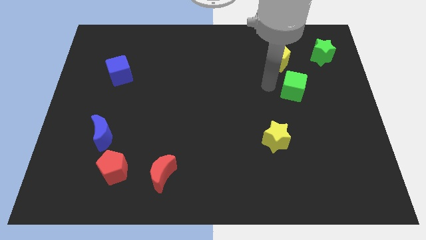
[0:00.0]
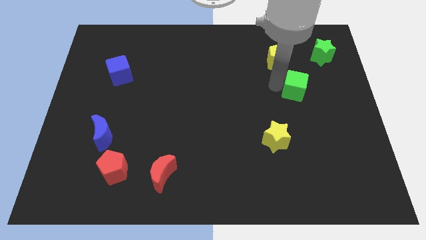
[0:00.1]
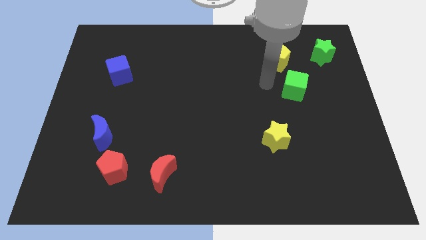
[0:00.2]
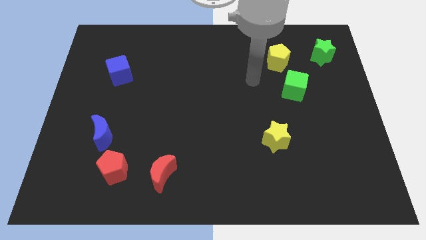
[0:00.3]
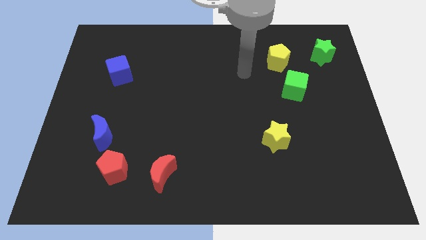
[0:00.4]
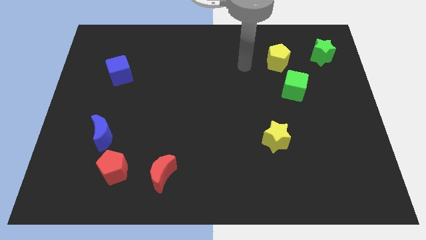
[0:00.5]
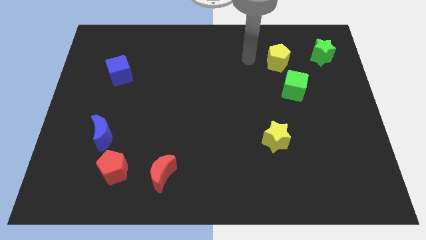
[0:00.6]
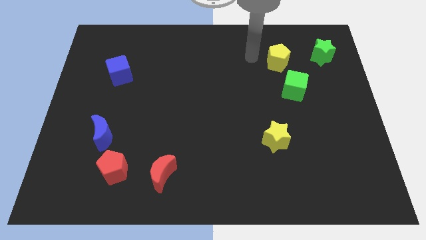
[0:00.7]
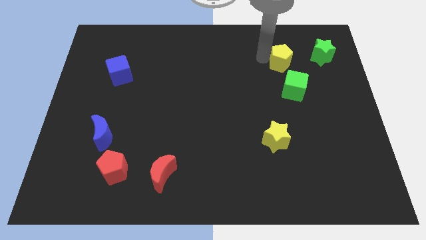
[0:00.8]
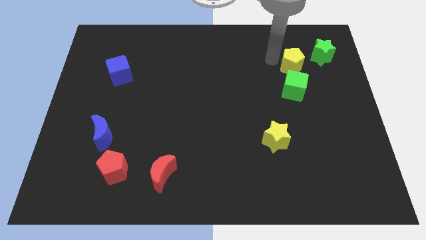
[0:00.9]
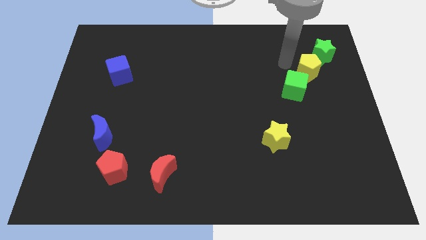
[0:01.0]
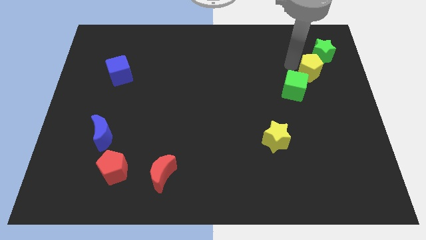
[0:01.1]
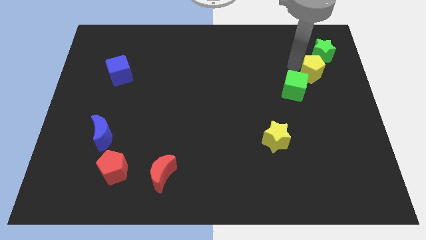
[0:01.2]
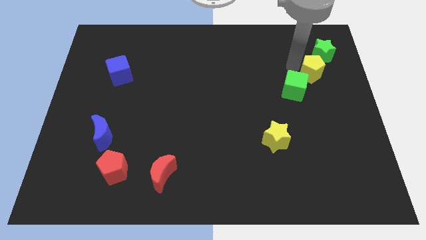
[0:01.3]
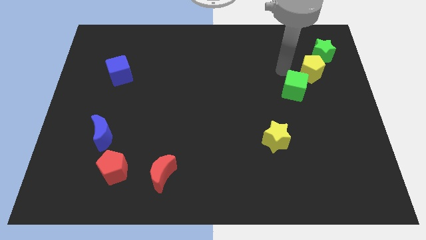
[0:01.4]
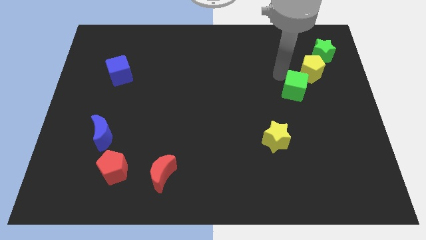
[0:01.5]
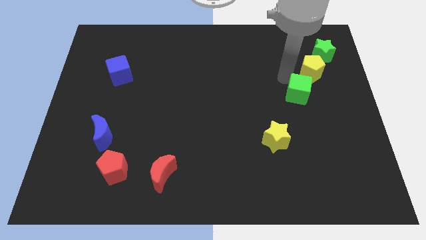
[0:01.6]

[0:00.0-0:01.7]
place the yellow pentagon in between the green star and green cube

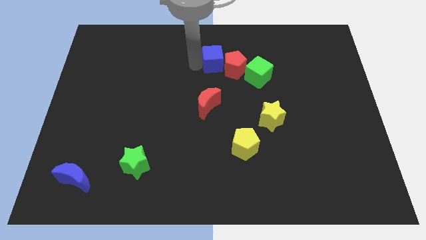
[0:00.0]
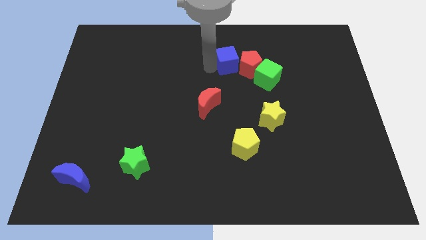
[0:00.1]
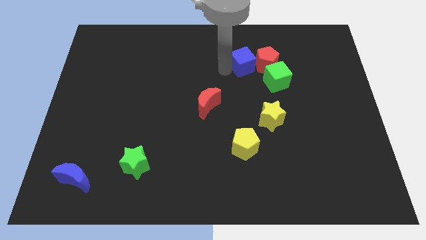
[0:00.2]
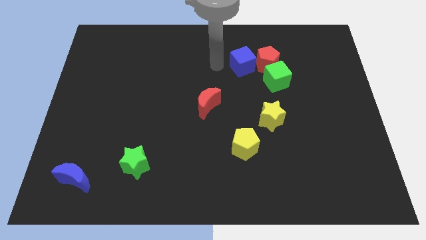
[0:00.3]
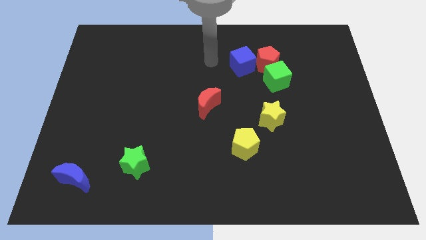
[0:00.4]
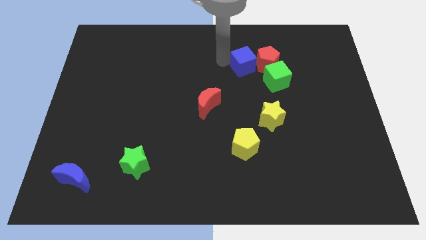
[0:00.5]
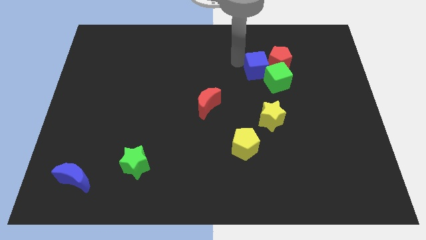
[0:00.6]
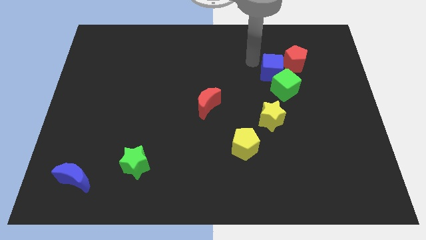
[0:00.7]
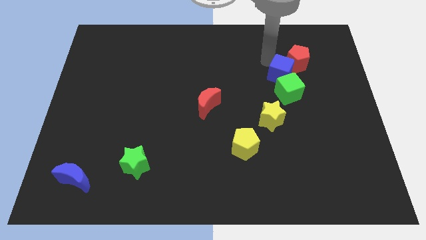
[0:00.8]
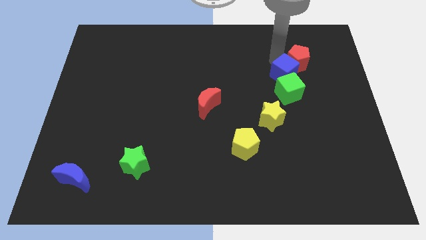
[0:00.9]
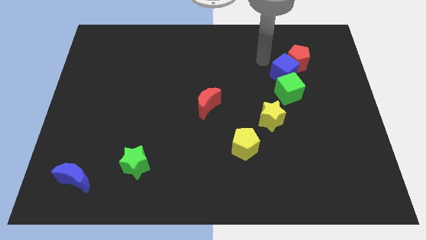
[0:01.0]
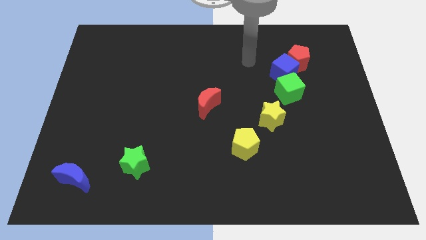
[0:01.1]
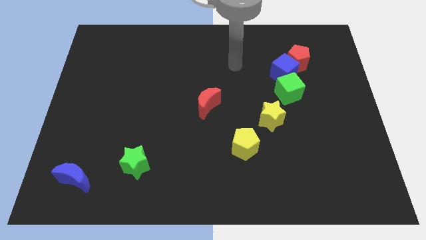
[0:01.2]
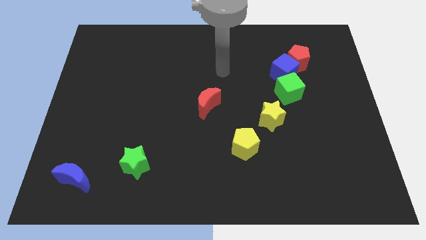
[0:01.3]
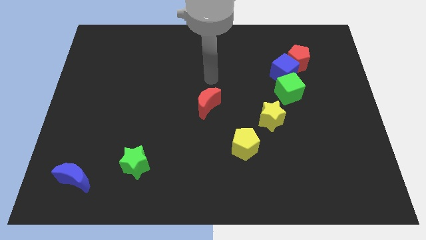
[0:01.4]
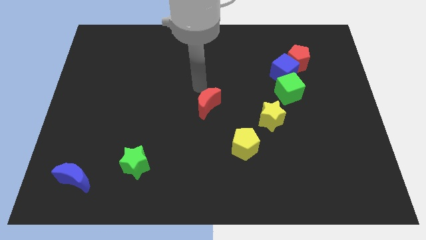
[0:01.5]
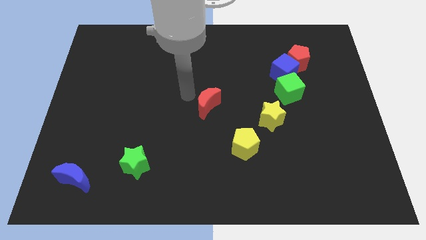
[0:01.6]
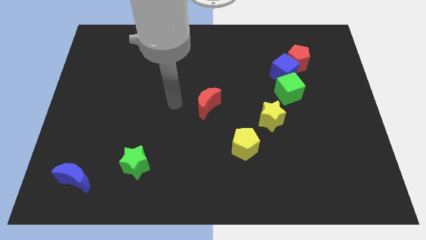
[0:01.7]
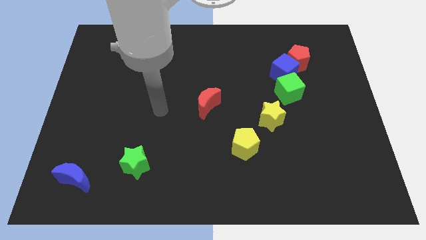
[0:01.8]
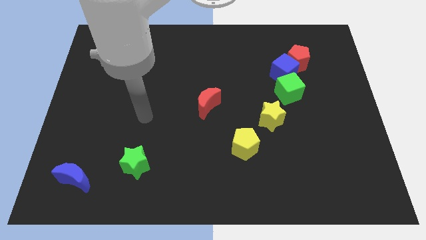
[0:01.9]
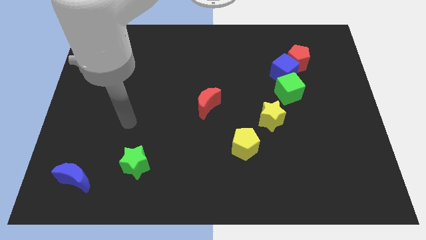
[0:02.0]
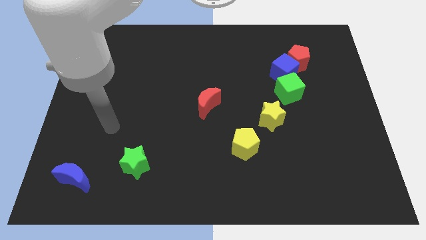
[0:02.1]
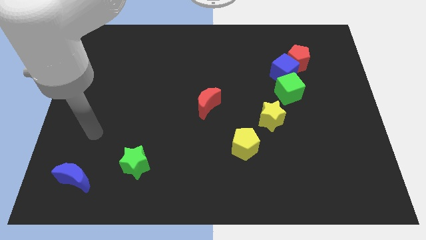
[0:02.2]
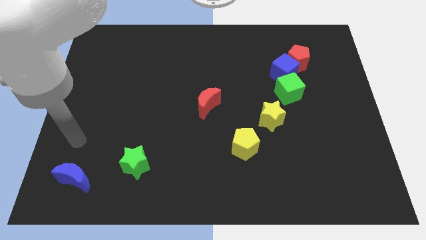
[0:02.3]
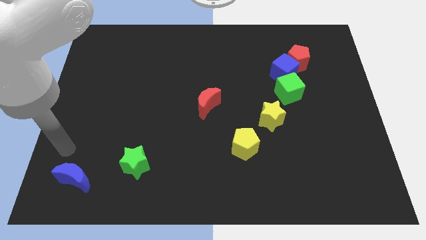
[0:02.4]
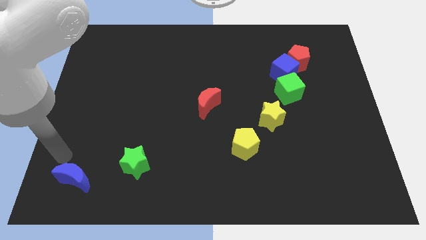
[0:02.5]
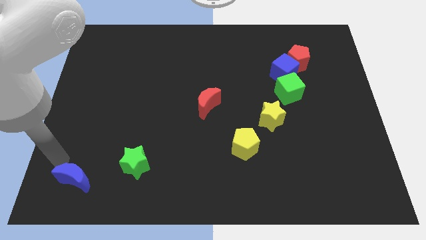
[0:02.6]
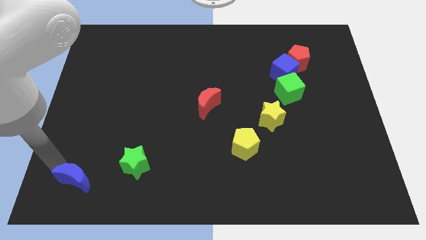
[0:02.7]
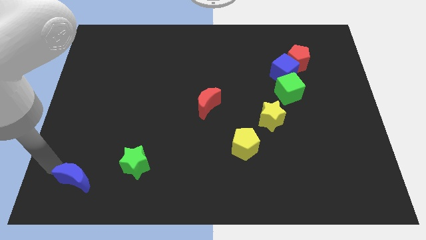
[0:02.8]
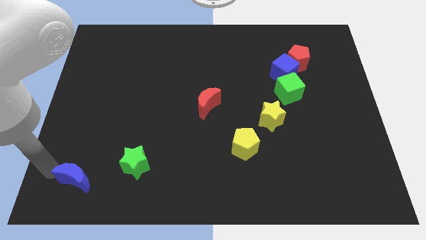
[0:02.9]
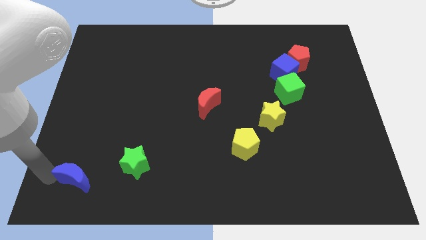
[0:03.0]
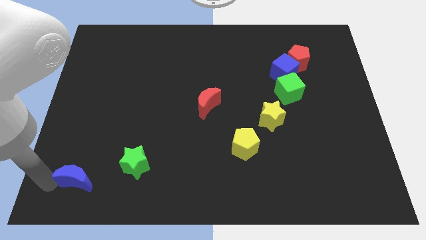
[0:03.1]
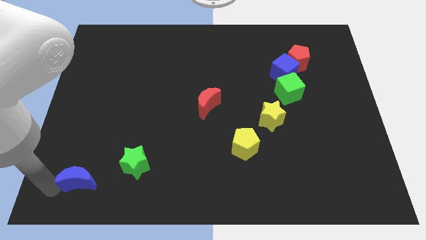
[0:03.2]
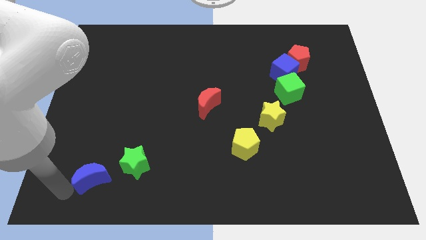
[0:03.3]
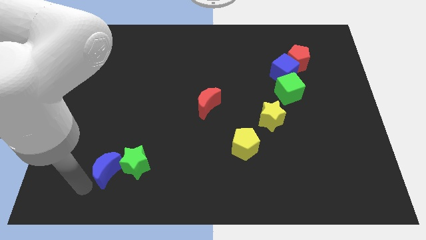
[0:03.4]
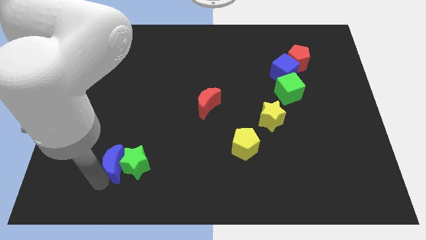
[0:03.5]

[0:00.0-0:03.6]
move your arm from blue cube to blue moon

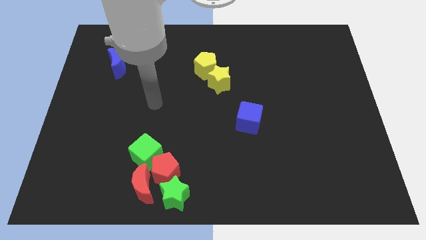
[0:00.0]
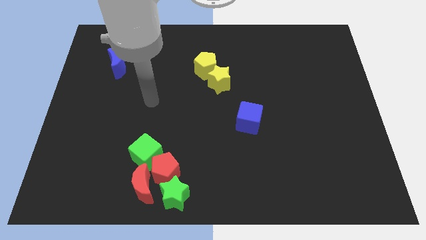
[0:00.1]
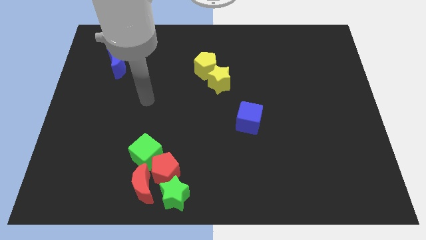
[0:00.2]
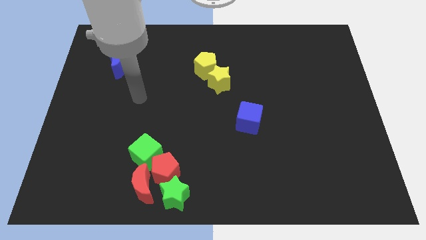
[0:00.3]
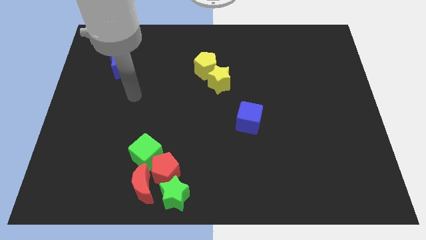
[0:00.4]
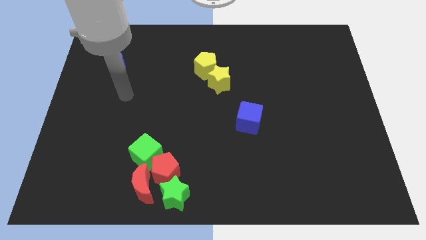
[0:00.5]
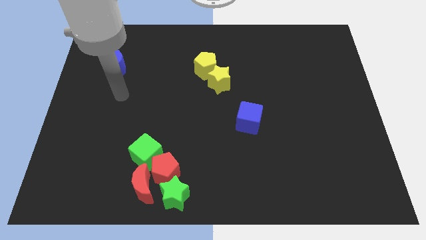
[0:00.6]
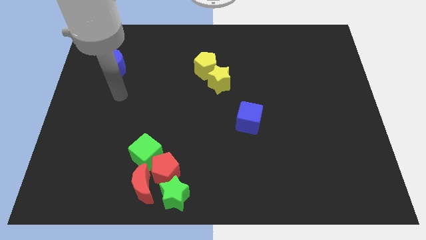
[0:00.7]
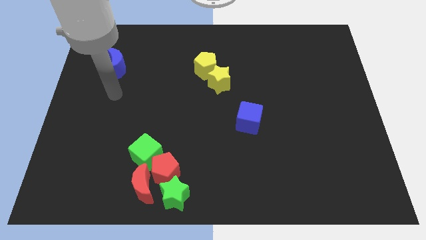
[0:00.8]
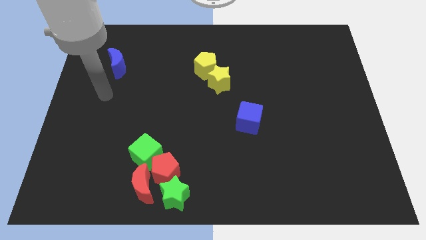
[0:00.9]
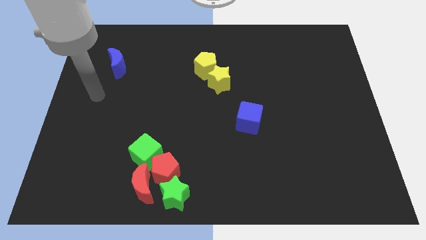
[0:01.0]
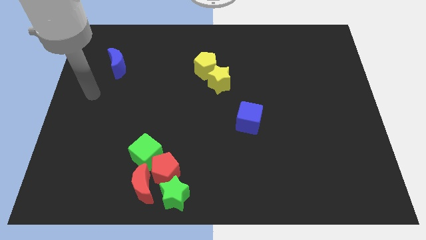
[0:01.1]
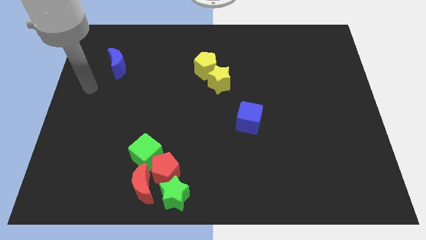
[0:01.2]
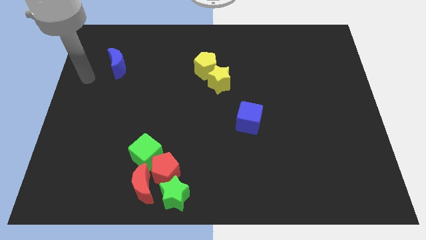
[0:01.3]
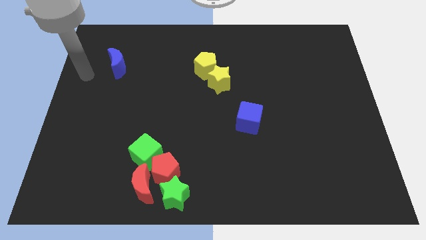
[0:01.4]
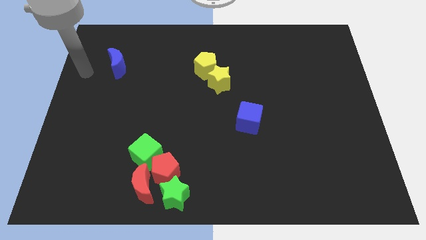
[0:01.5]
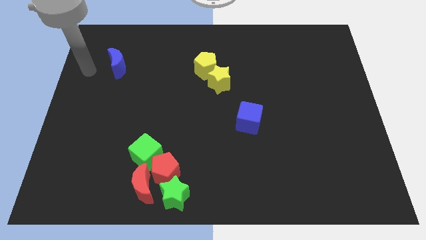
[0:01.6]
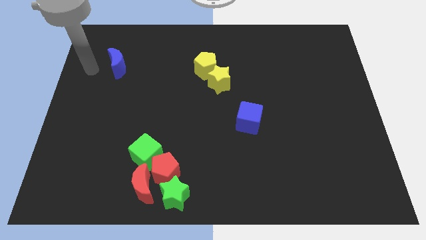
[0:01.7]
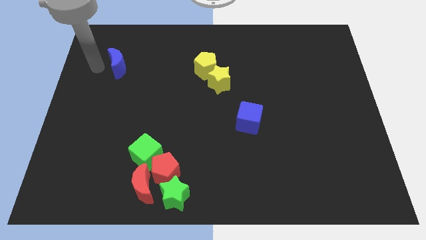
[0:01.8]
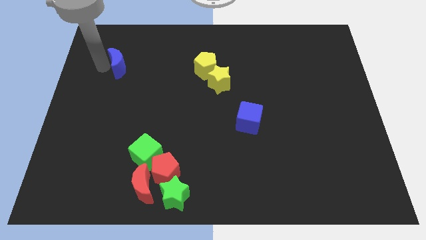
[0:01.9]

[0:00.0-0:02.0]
point your arm to the left side of the blue moon

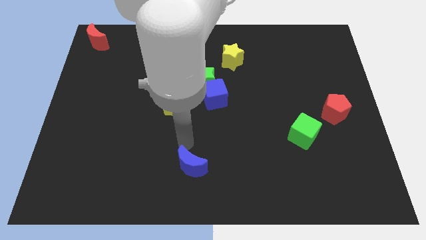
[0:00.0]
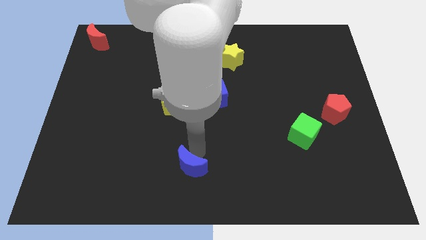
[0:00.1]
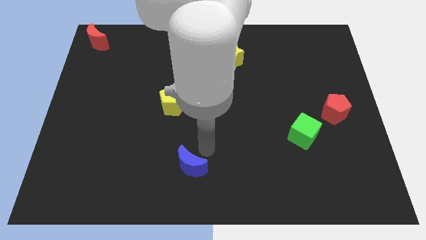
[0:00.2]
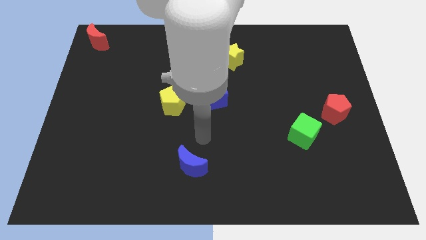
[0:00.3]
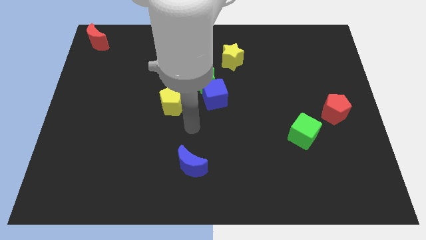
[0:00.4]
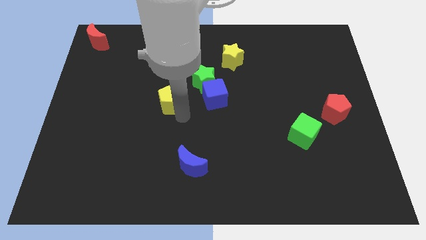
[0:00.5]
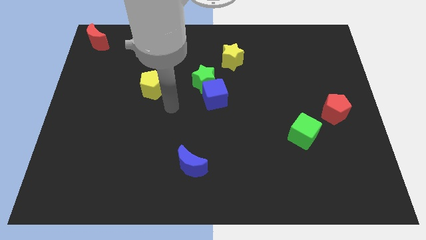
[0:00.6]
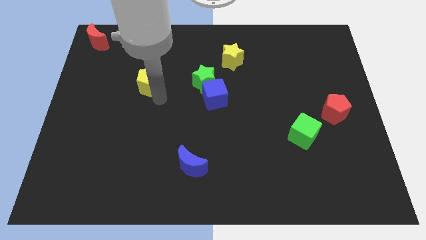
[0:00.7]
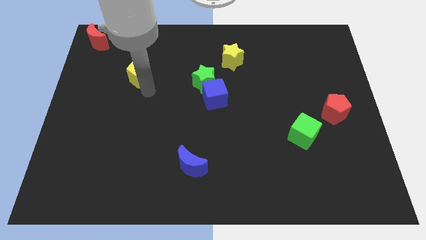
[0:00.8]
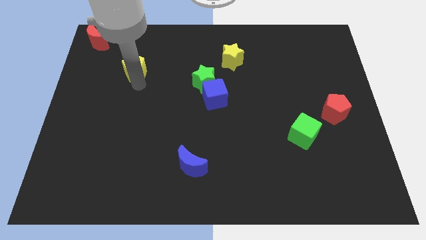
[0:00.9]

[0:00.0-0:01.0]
move the yellow pentagon diagonally below the red moon

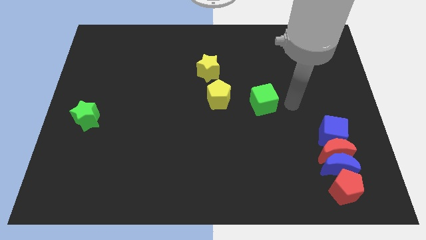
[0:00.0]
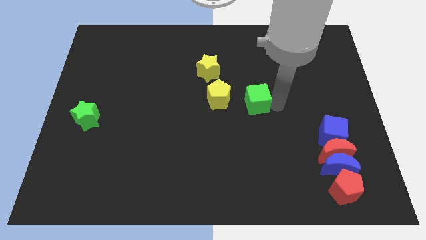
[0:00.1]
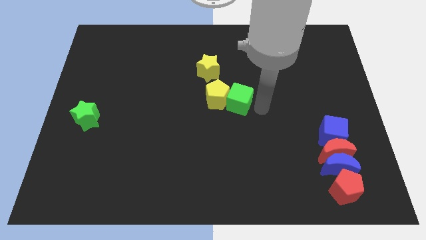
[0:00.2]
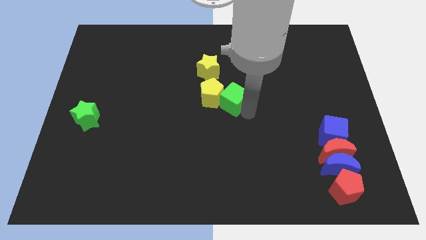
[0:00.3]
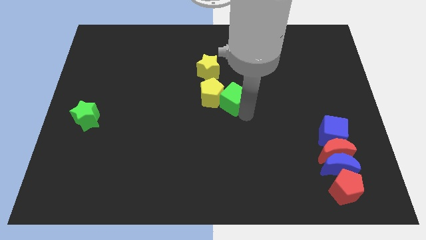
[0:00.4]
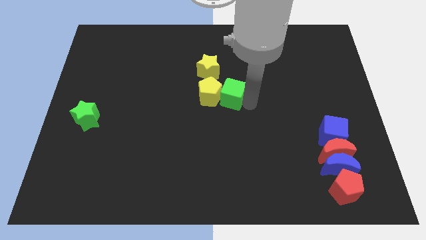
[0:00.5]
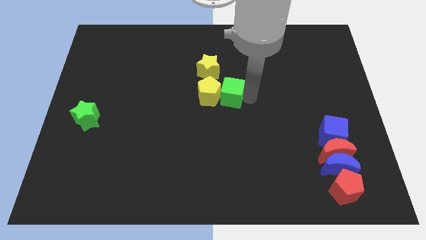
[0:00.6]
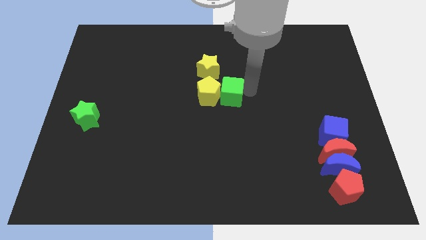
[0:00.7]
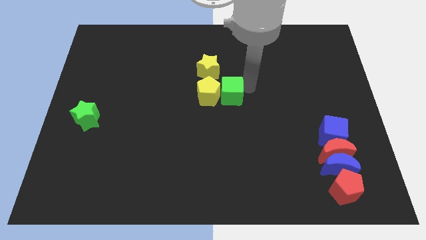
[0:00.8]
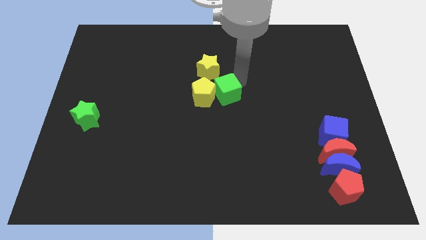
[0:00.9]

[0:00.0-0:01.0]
push the green cube into the yellow pentagon
